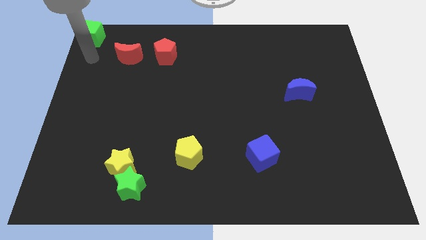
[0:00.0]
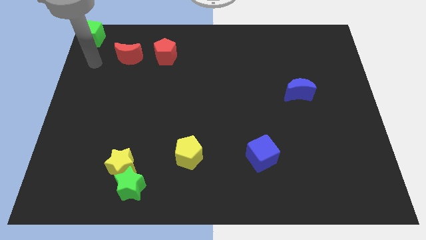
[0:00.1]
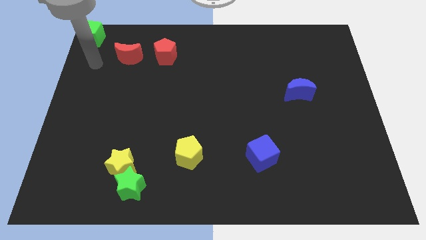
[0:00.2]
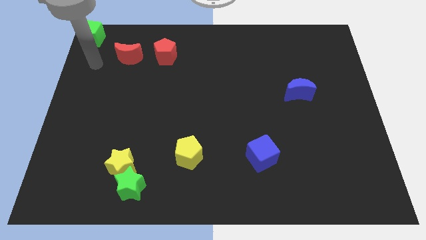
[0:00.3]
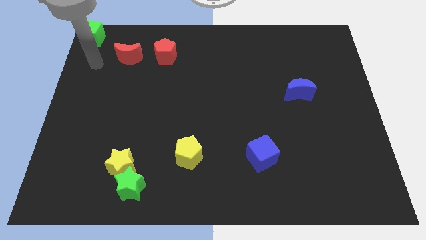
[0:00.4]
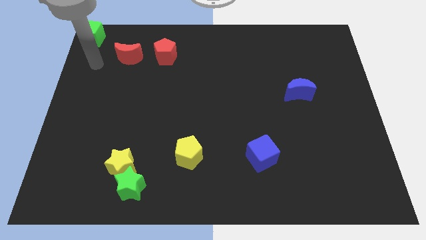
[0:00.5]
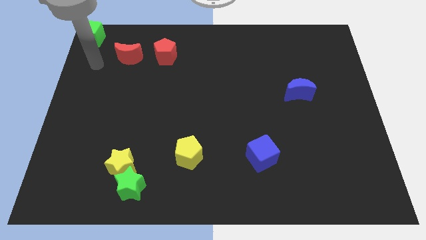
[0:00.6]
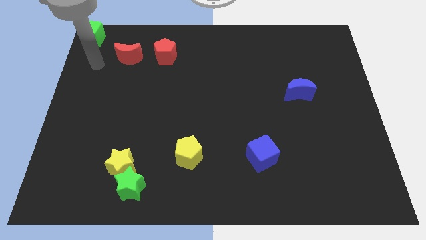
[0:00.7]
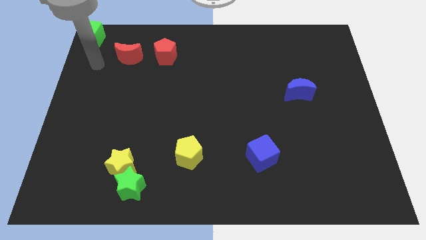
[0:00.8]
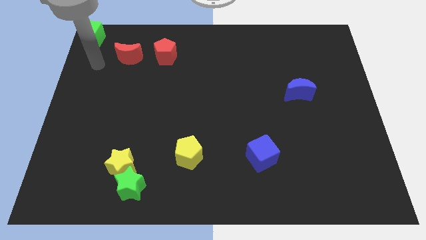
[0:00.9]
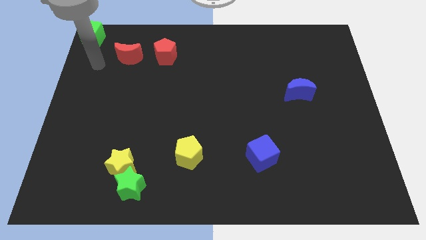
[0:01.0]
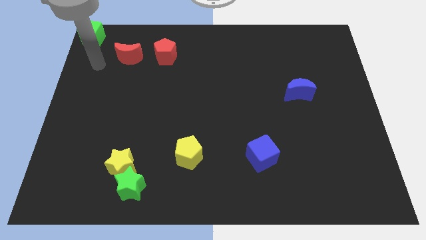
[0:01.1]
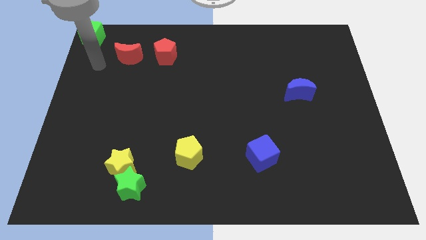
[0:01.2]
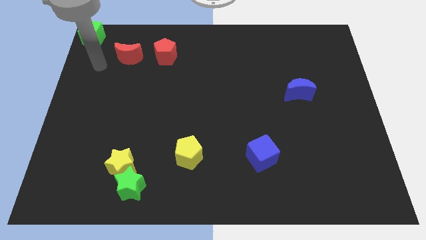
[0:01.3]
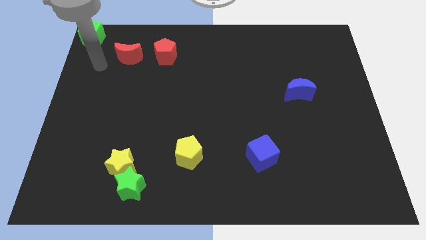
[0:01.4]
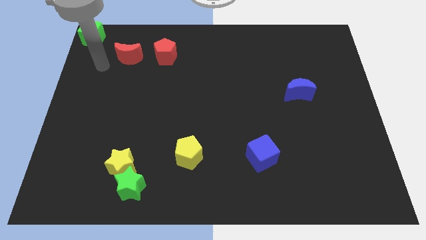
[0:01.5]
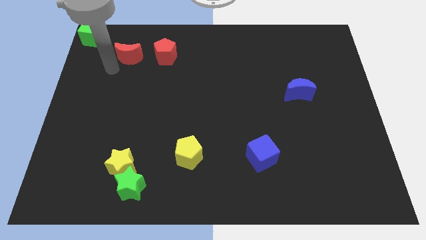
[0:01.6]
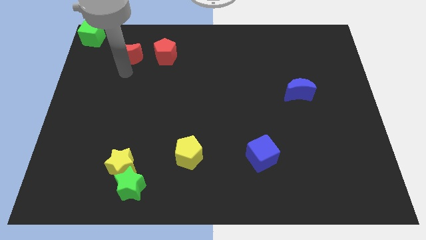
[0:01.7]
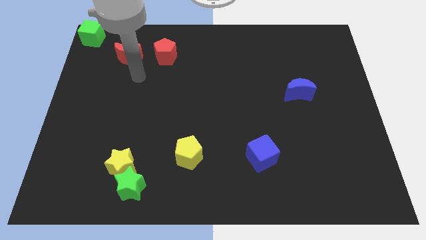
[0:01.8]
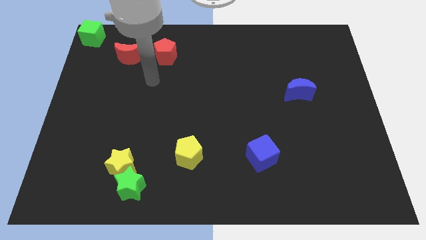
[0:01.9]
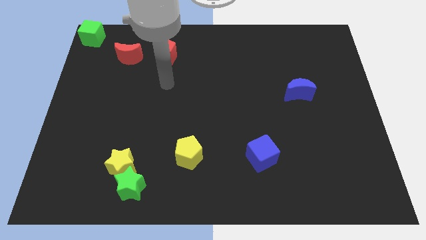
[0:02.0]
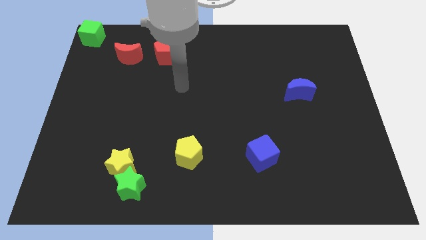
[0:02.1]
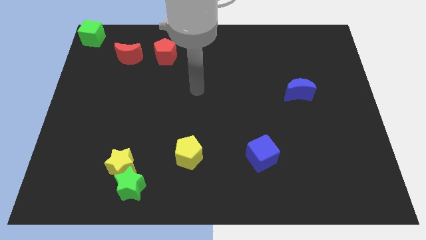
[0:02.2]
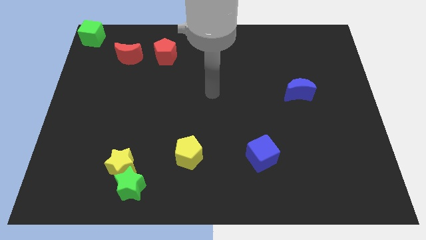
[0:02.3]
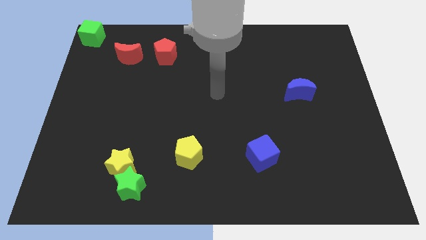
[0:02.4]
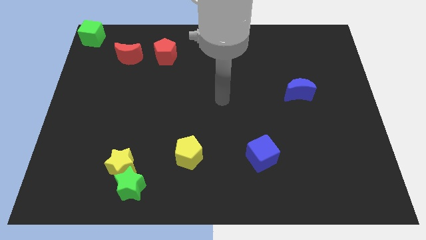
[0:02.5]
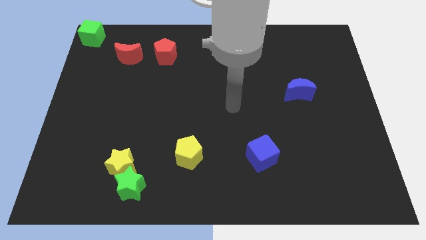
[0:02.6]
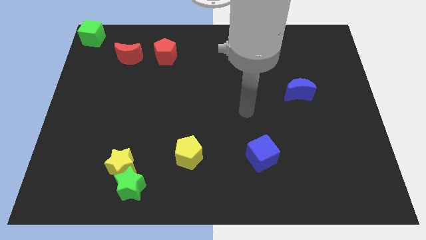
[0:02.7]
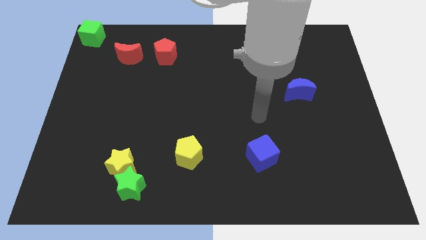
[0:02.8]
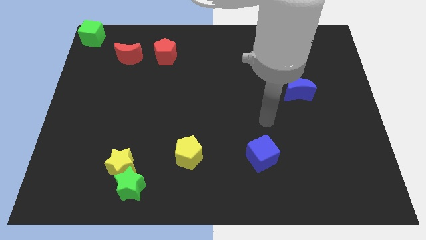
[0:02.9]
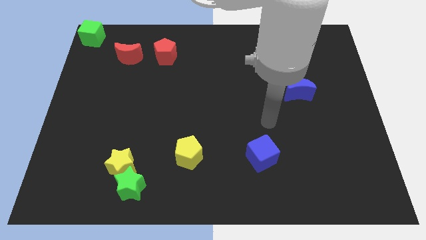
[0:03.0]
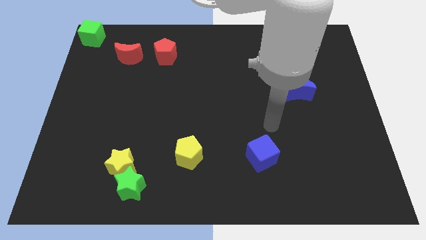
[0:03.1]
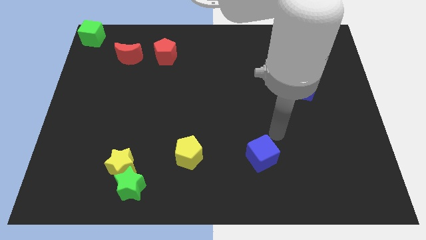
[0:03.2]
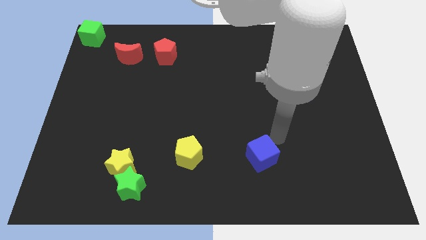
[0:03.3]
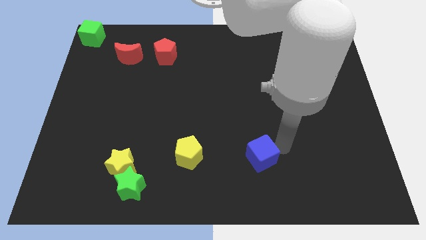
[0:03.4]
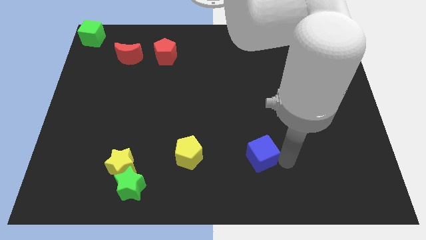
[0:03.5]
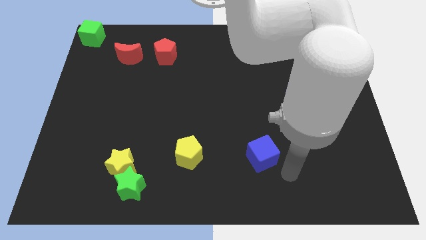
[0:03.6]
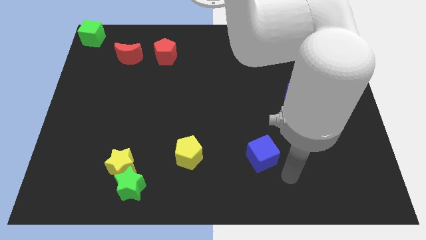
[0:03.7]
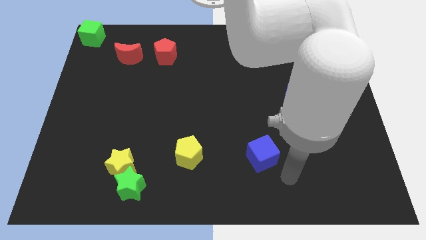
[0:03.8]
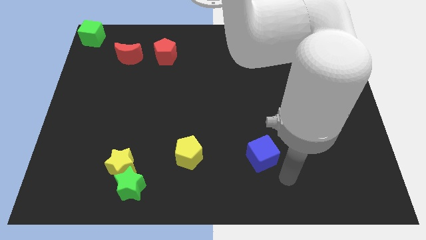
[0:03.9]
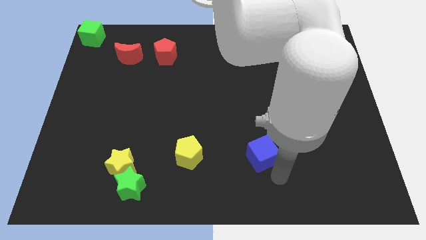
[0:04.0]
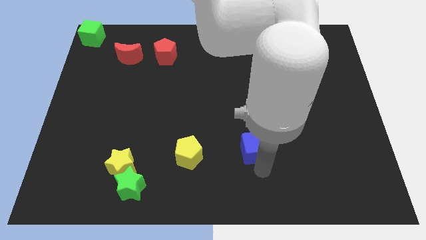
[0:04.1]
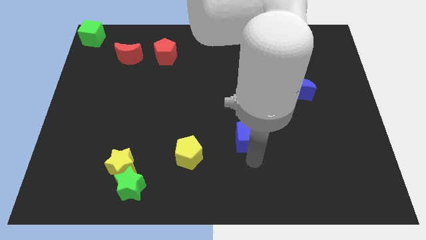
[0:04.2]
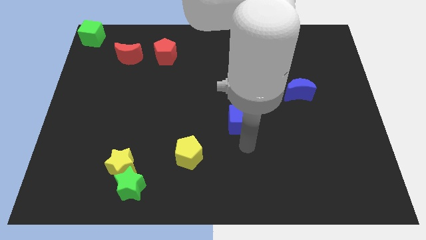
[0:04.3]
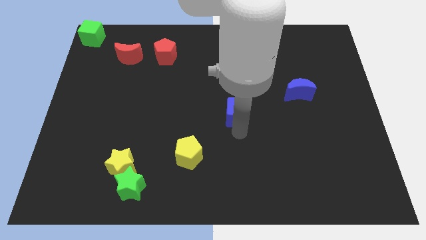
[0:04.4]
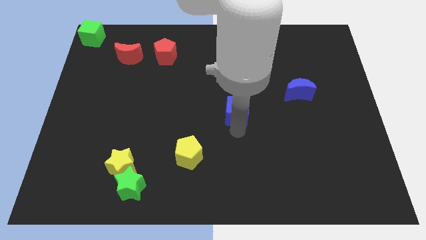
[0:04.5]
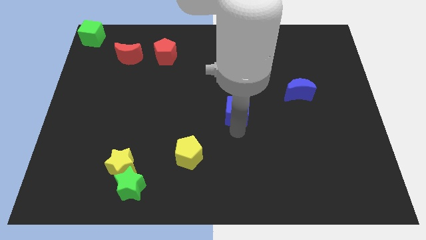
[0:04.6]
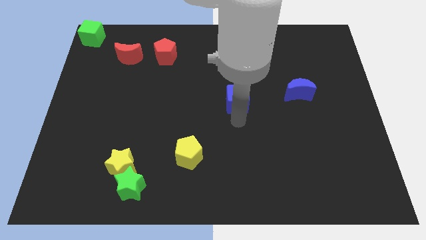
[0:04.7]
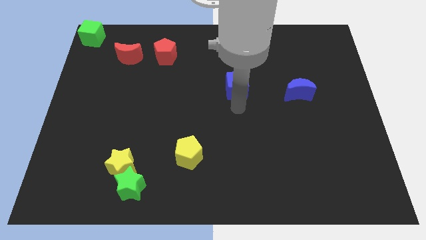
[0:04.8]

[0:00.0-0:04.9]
move blue cube slightly up

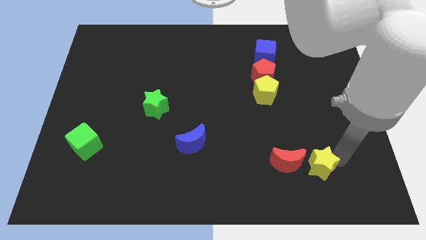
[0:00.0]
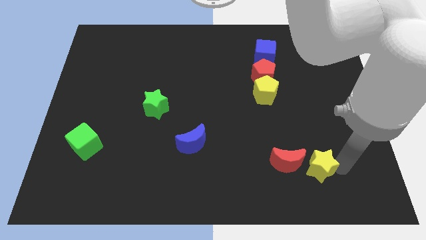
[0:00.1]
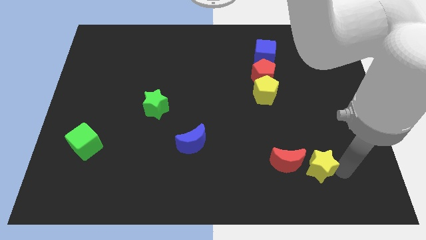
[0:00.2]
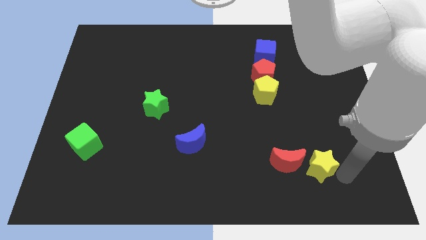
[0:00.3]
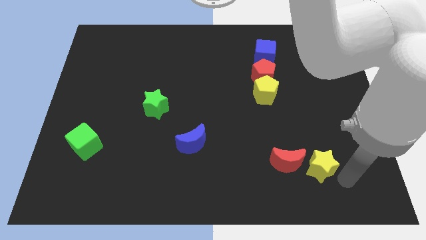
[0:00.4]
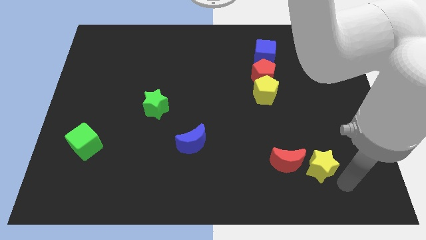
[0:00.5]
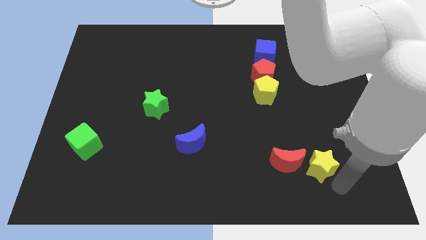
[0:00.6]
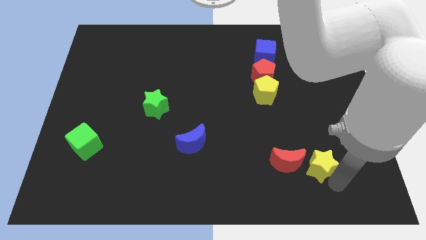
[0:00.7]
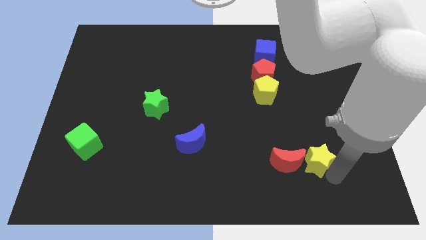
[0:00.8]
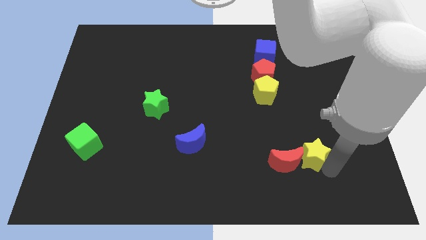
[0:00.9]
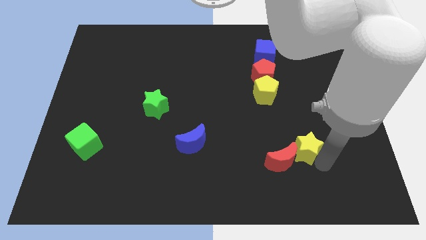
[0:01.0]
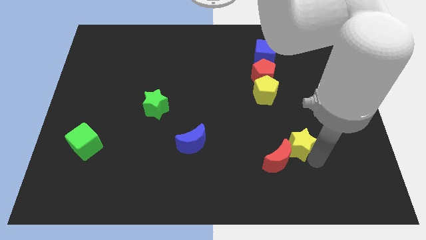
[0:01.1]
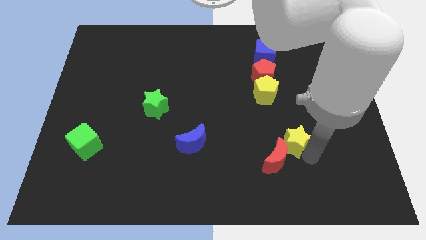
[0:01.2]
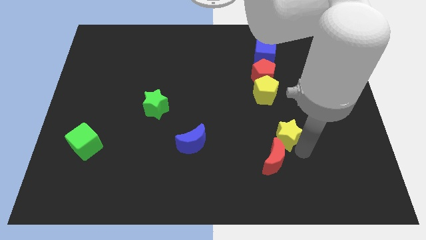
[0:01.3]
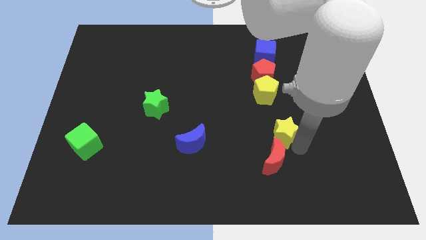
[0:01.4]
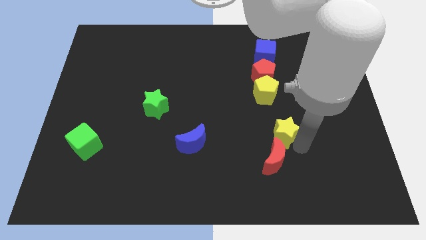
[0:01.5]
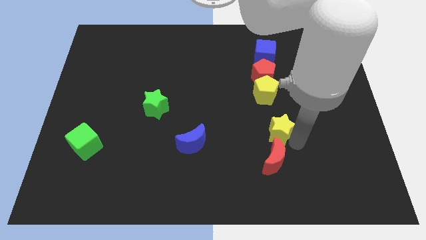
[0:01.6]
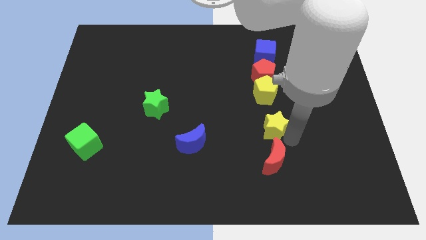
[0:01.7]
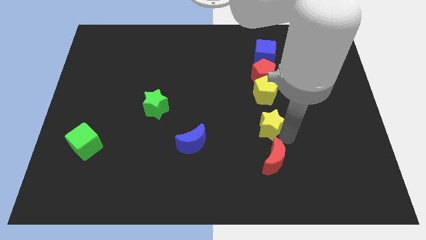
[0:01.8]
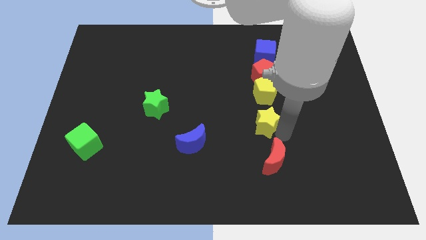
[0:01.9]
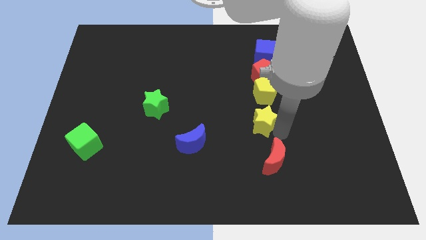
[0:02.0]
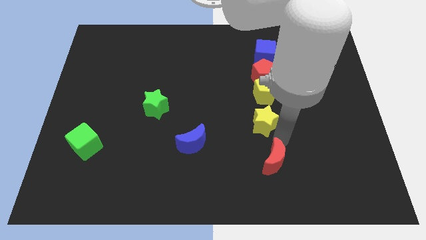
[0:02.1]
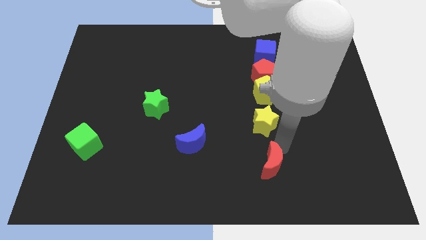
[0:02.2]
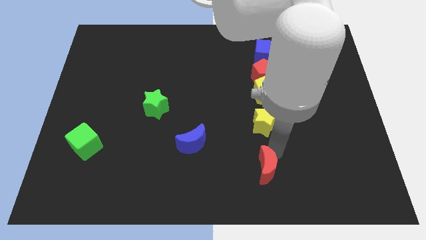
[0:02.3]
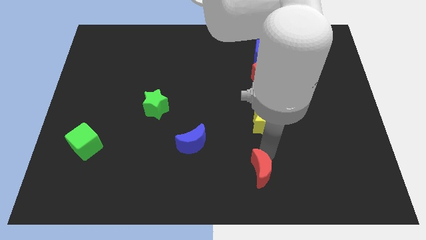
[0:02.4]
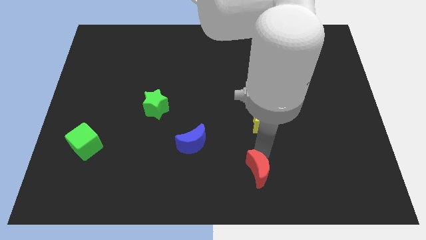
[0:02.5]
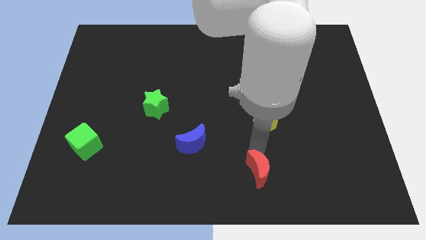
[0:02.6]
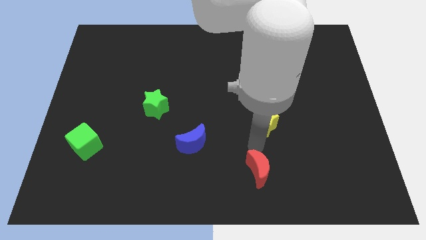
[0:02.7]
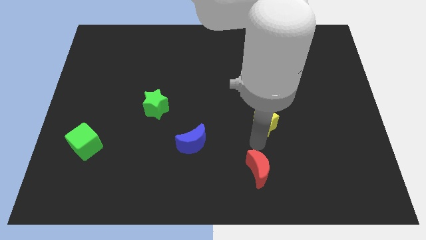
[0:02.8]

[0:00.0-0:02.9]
place the yellow star above the red moon

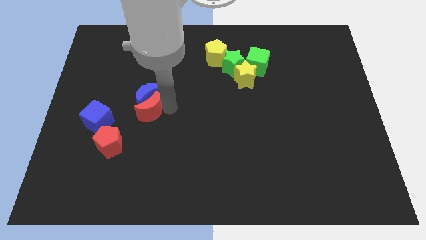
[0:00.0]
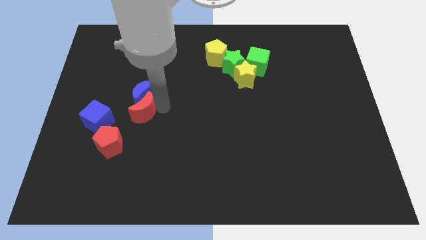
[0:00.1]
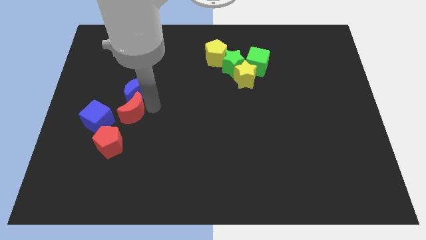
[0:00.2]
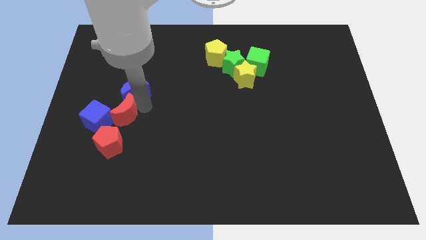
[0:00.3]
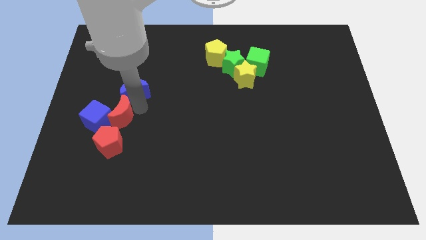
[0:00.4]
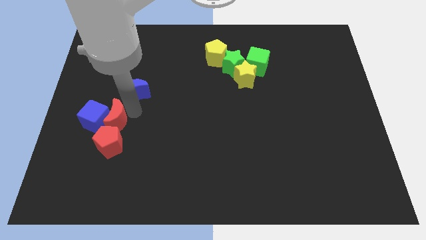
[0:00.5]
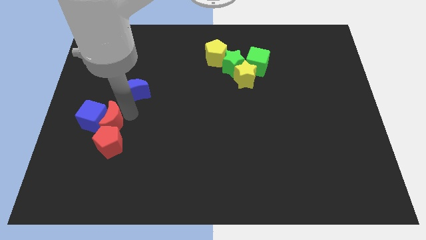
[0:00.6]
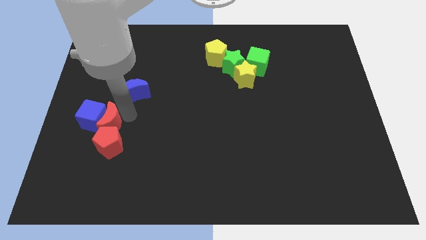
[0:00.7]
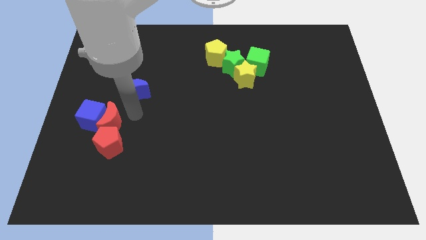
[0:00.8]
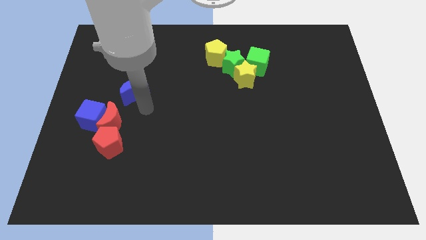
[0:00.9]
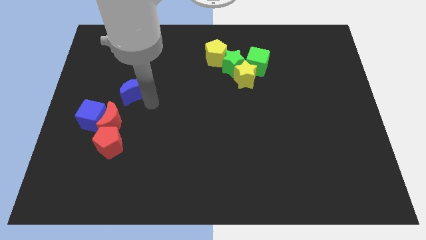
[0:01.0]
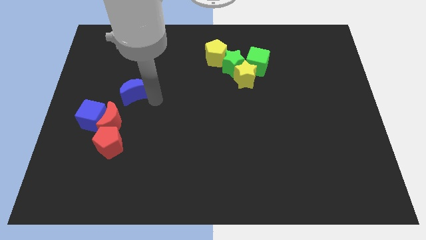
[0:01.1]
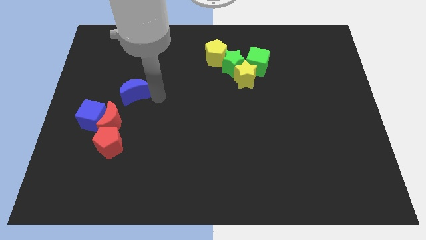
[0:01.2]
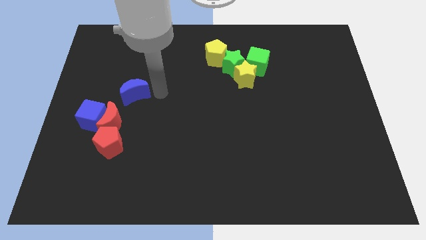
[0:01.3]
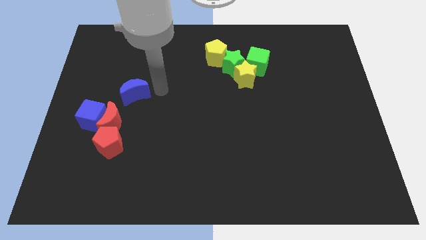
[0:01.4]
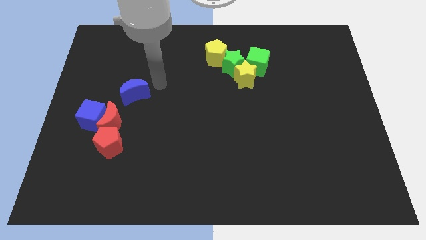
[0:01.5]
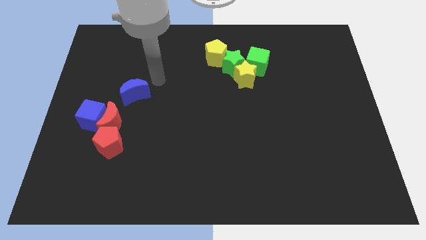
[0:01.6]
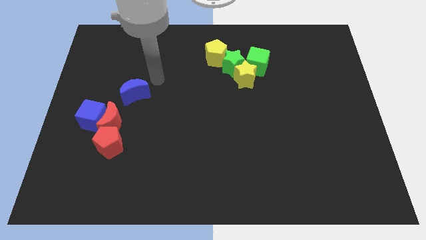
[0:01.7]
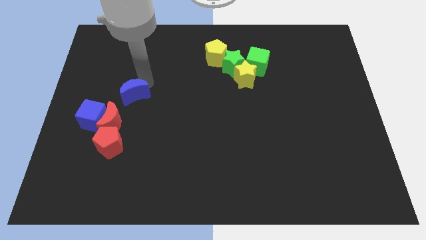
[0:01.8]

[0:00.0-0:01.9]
move the arm to the right of the blue crecsent
